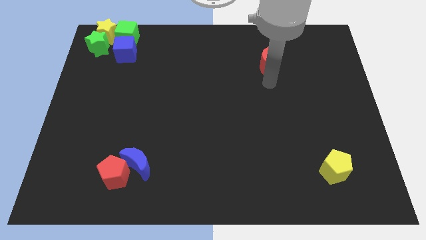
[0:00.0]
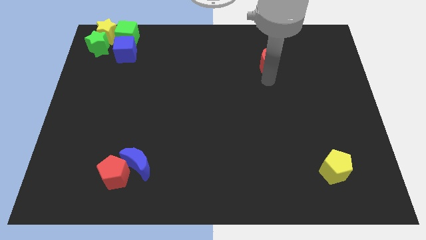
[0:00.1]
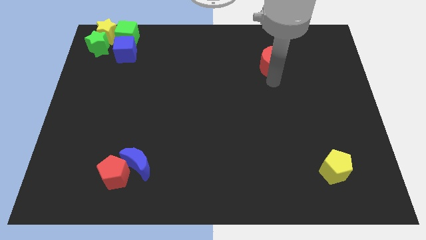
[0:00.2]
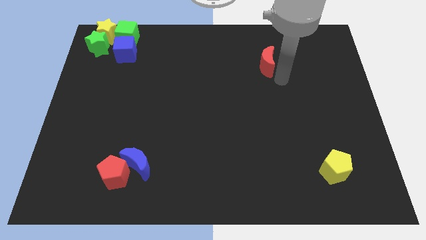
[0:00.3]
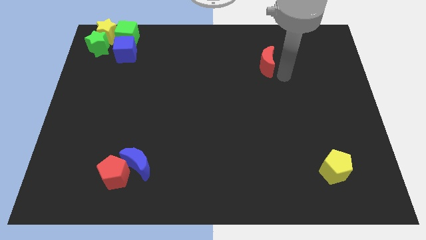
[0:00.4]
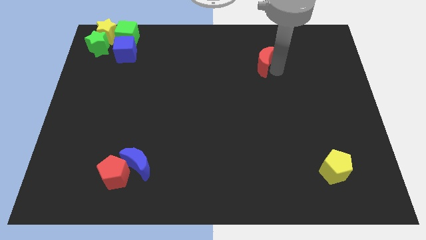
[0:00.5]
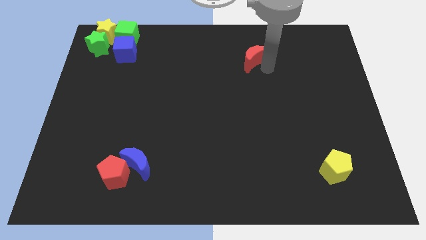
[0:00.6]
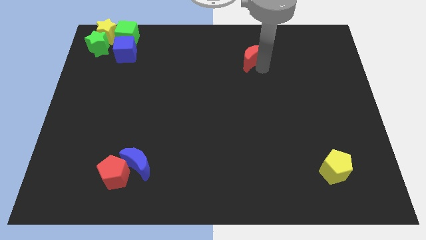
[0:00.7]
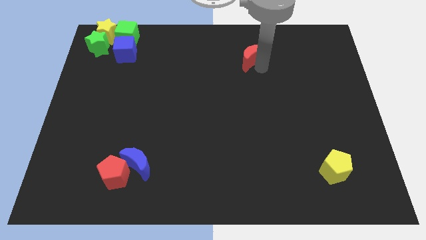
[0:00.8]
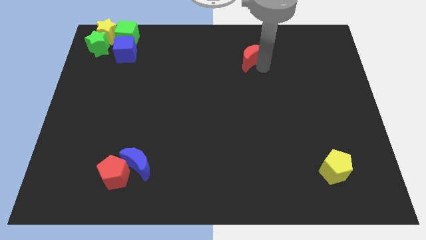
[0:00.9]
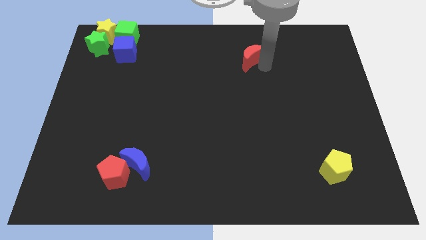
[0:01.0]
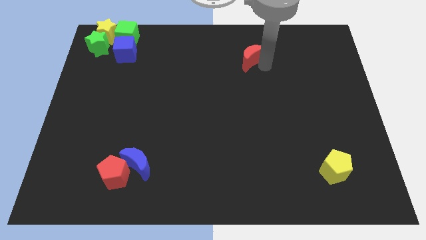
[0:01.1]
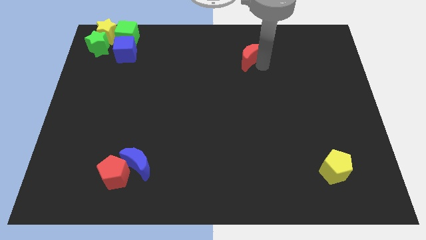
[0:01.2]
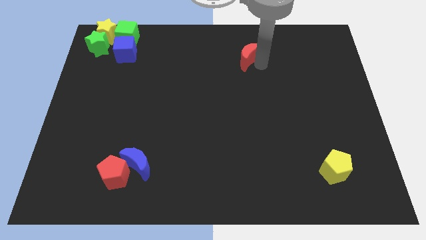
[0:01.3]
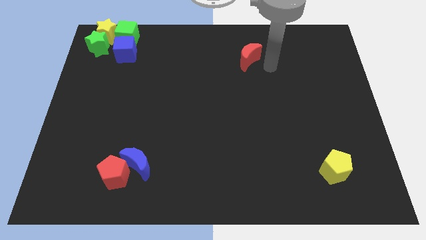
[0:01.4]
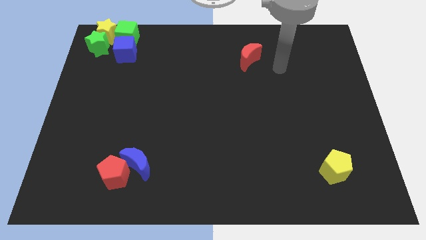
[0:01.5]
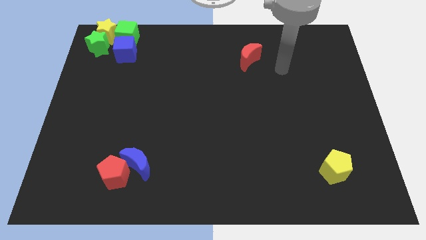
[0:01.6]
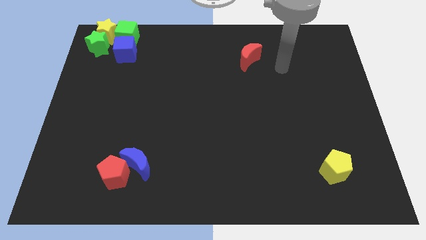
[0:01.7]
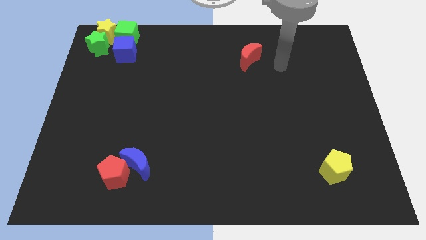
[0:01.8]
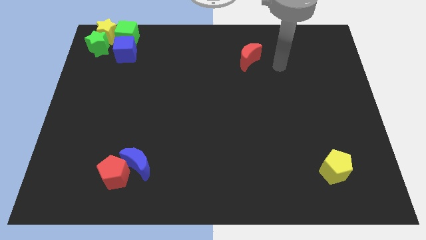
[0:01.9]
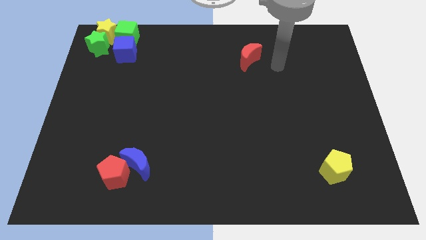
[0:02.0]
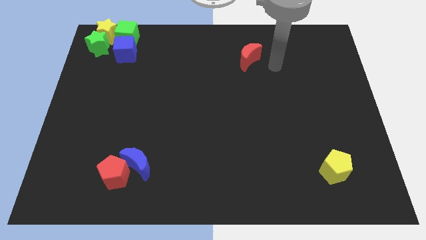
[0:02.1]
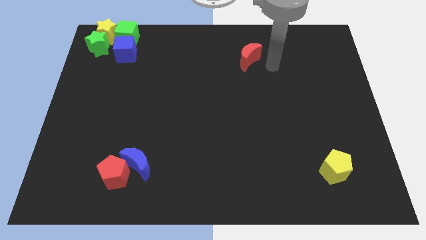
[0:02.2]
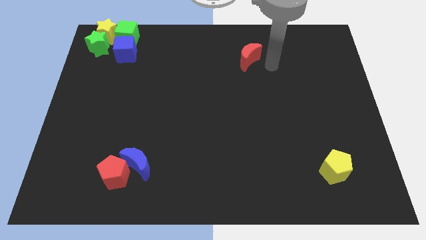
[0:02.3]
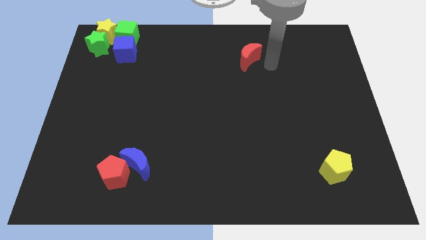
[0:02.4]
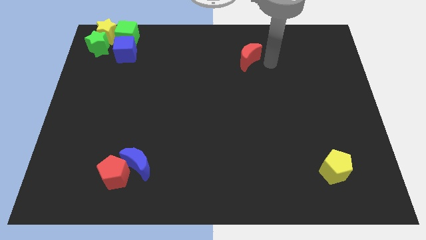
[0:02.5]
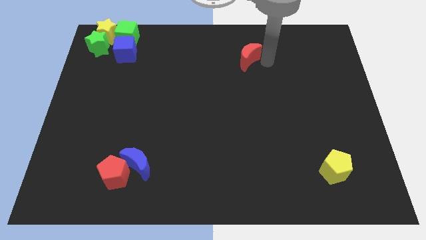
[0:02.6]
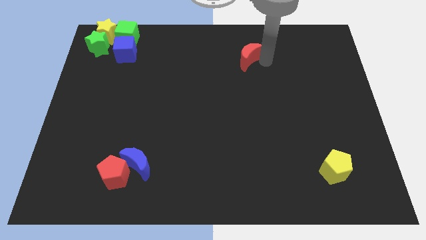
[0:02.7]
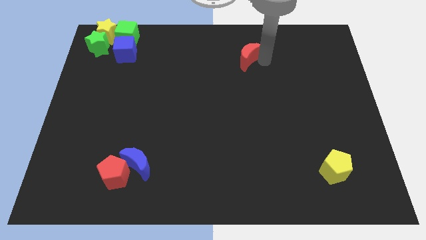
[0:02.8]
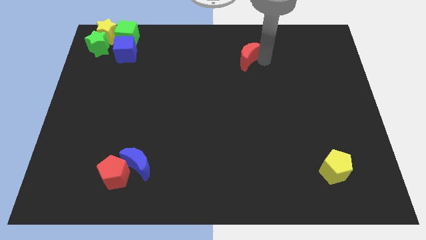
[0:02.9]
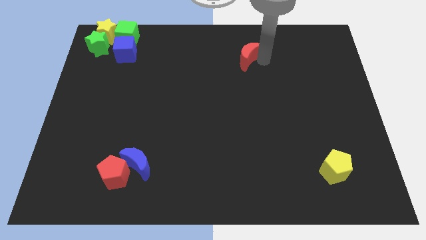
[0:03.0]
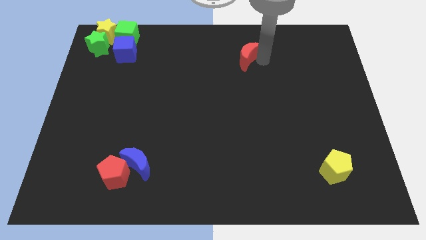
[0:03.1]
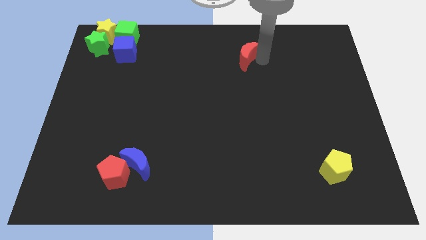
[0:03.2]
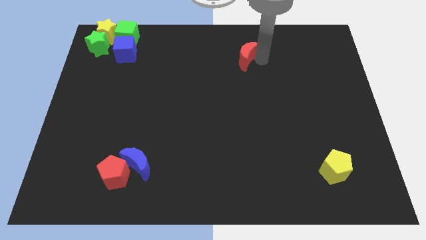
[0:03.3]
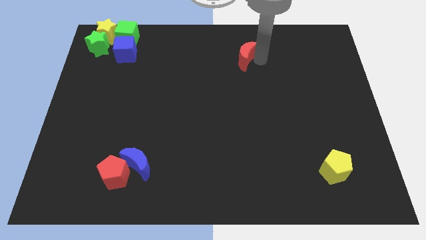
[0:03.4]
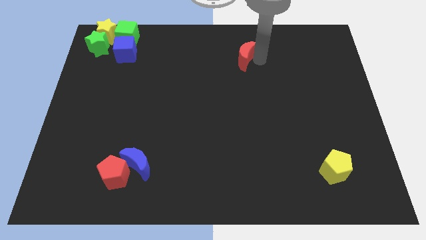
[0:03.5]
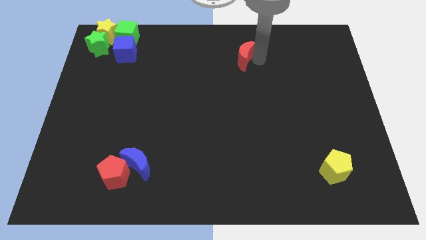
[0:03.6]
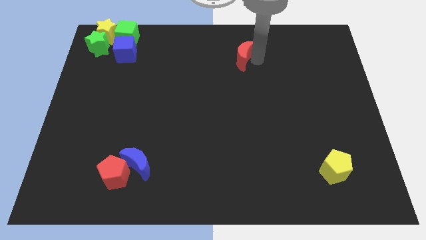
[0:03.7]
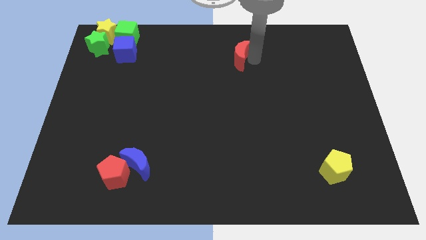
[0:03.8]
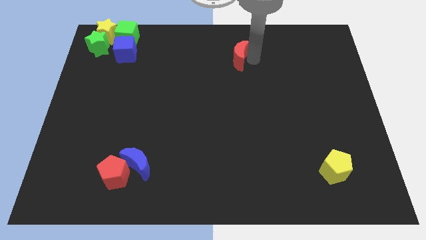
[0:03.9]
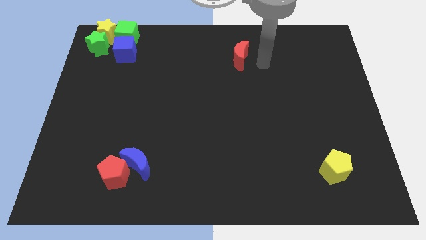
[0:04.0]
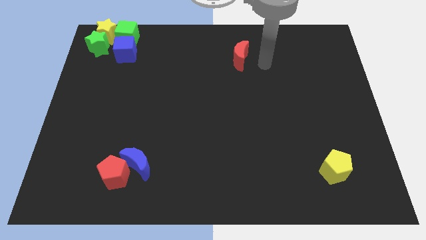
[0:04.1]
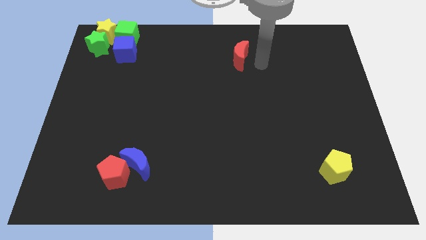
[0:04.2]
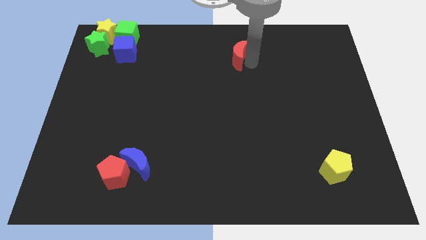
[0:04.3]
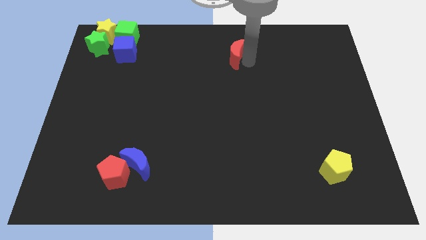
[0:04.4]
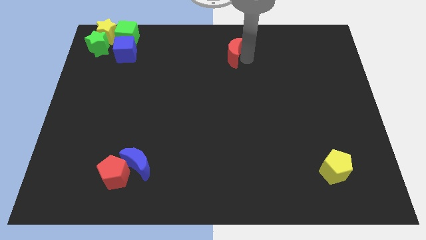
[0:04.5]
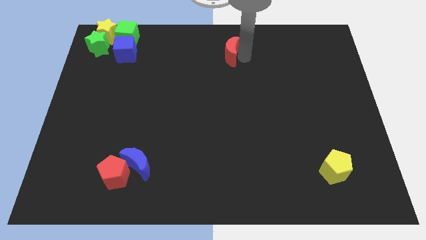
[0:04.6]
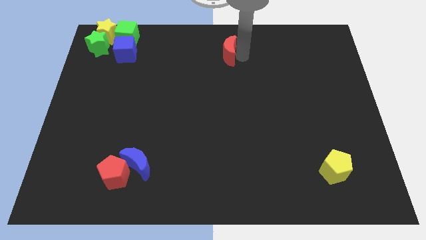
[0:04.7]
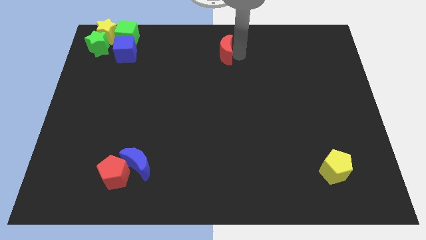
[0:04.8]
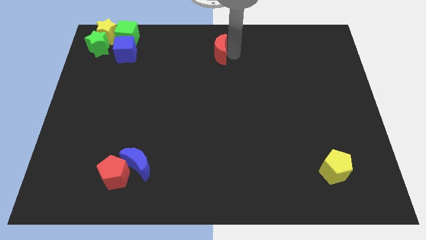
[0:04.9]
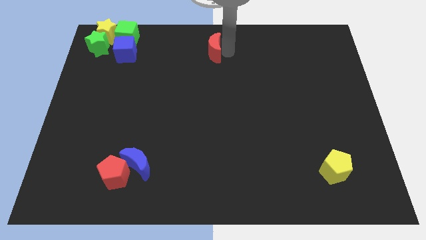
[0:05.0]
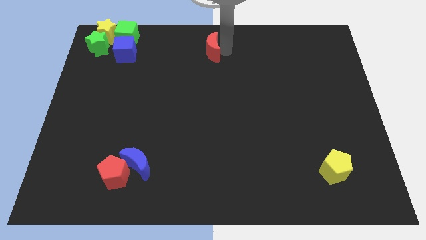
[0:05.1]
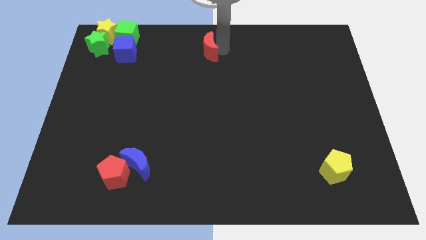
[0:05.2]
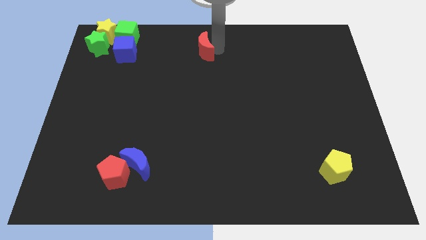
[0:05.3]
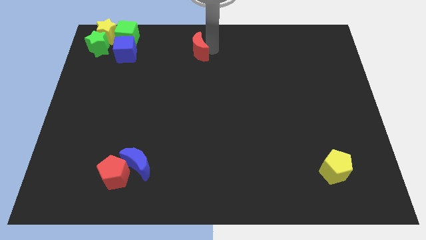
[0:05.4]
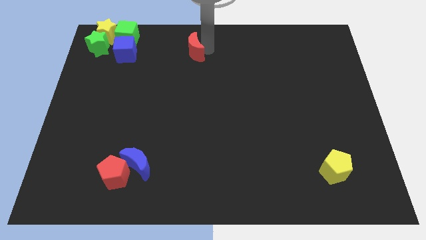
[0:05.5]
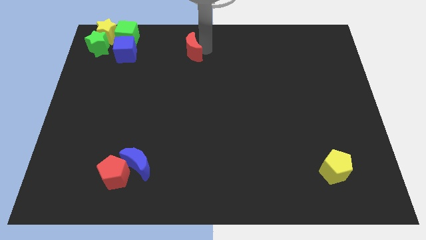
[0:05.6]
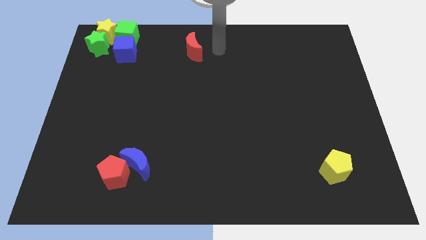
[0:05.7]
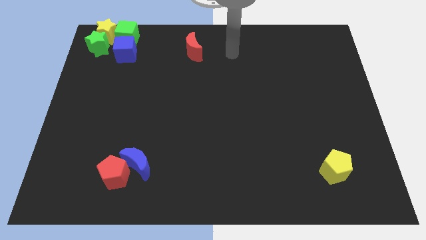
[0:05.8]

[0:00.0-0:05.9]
push the red crescent to the top center of the board

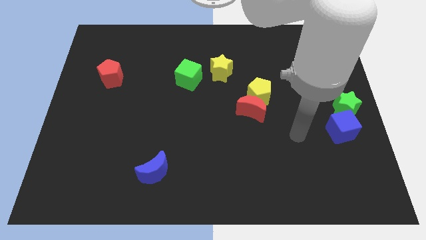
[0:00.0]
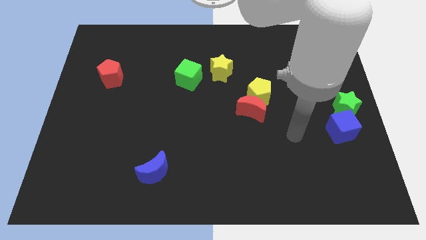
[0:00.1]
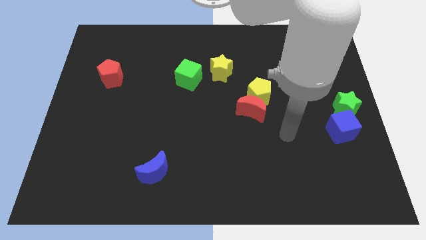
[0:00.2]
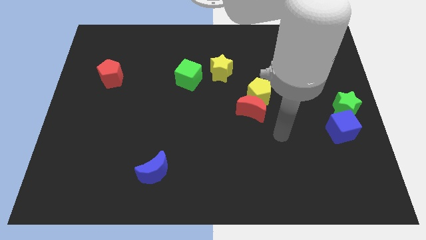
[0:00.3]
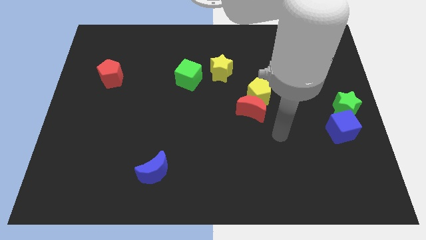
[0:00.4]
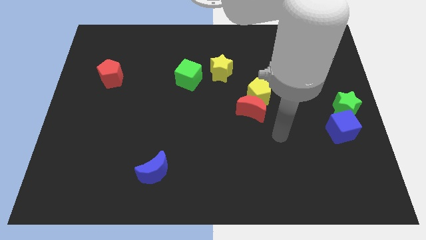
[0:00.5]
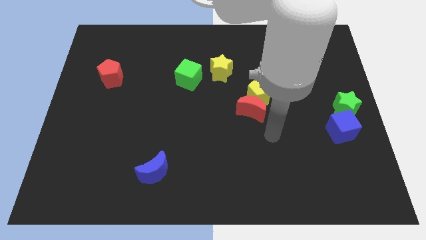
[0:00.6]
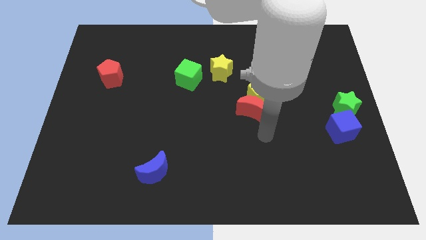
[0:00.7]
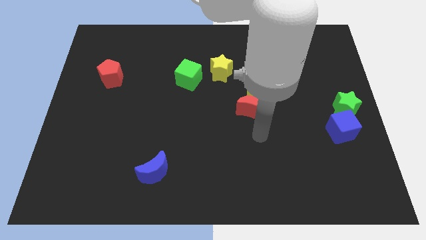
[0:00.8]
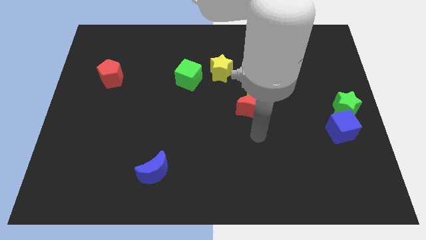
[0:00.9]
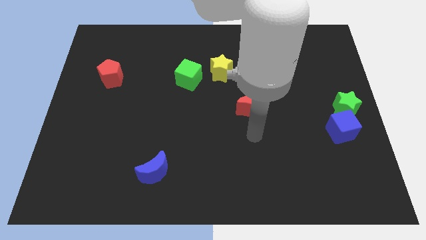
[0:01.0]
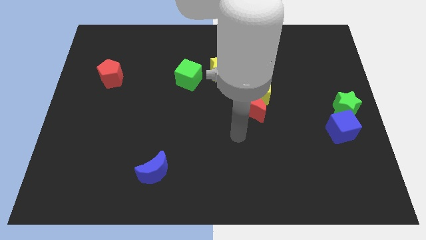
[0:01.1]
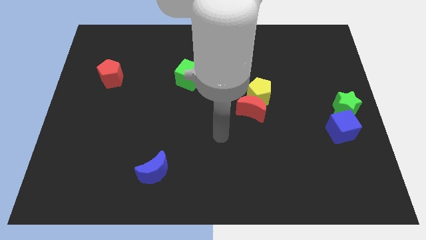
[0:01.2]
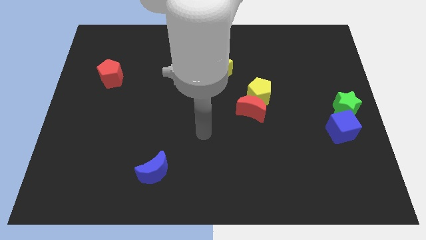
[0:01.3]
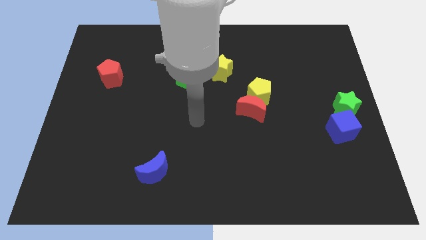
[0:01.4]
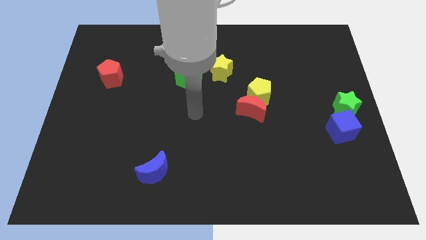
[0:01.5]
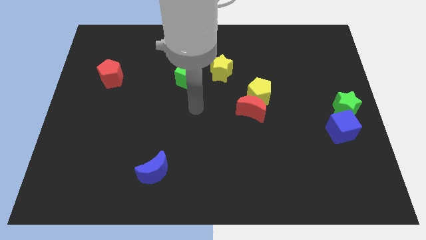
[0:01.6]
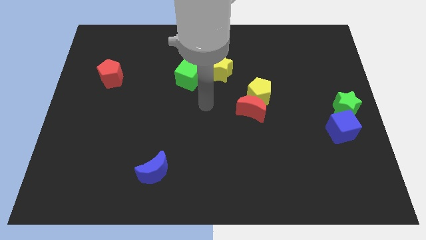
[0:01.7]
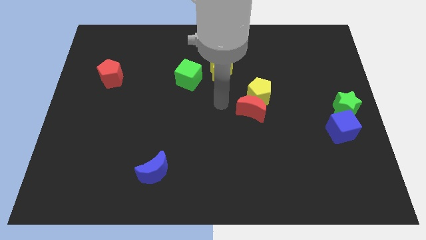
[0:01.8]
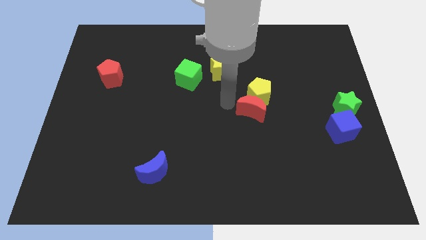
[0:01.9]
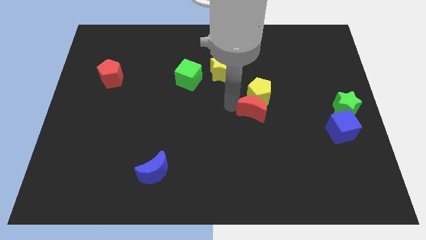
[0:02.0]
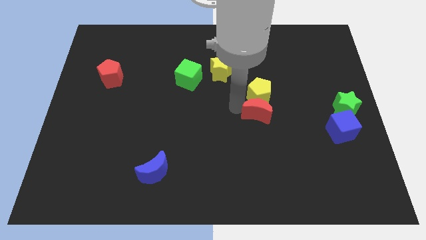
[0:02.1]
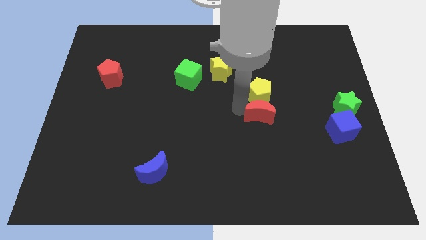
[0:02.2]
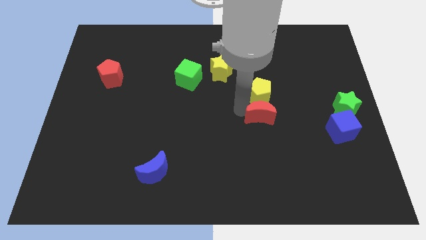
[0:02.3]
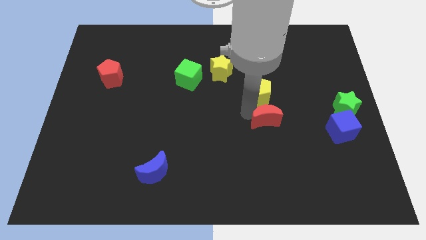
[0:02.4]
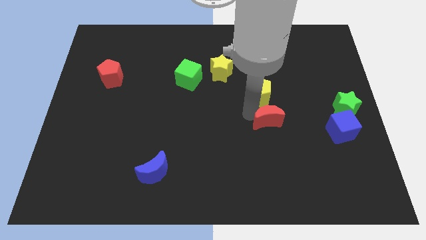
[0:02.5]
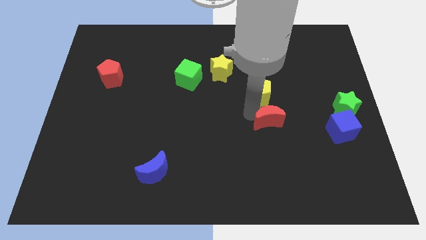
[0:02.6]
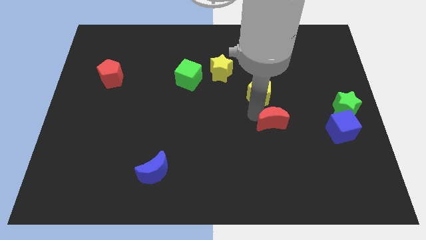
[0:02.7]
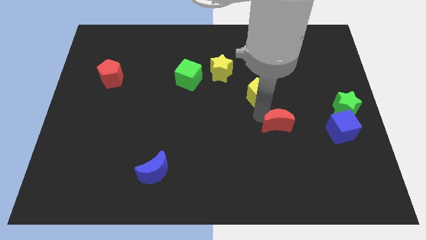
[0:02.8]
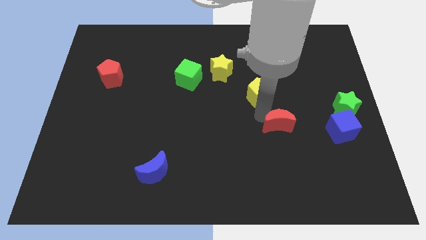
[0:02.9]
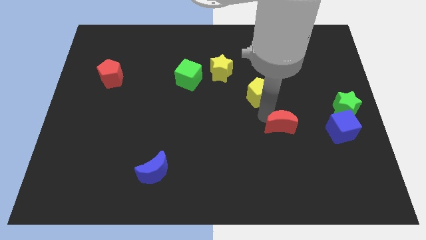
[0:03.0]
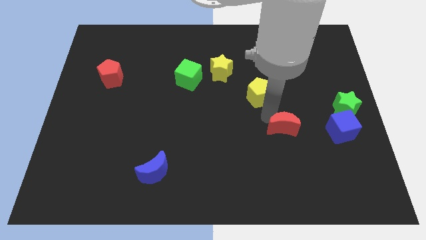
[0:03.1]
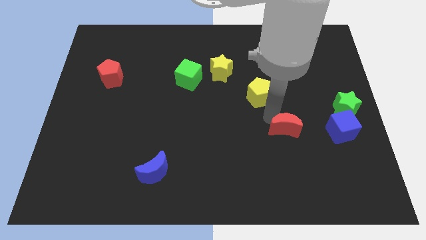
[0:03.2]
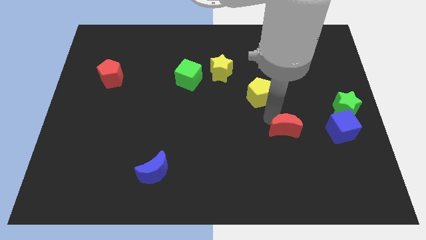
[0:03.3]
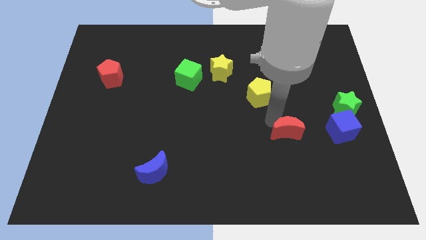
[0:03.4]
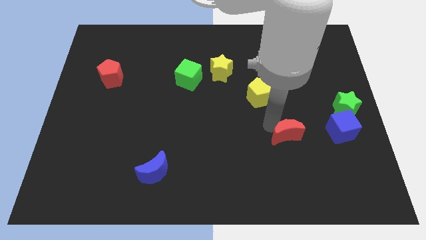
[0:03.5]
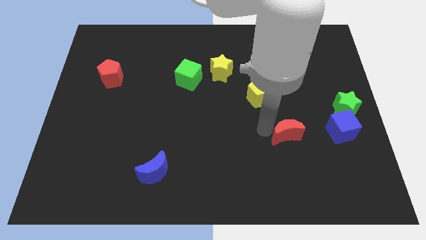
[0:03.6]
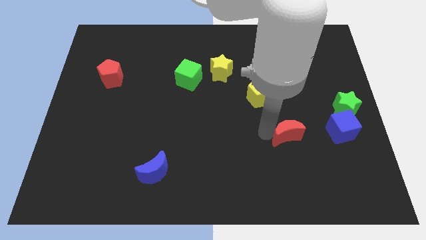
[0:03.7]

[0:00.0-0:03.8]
move the red moon away from the yellow pentagon
